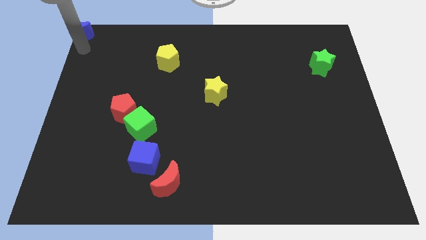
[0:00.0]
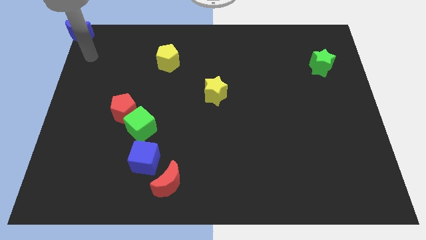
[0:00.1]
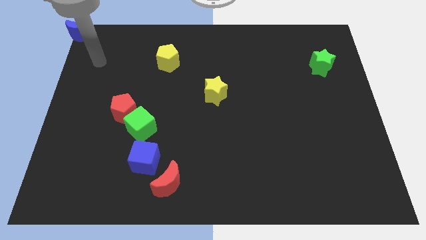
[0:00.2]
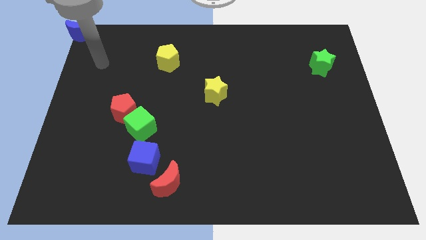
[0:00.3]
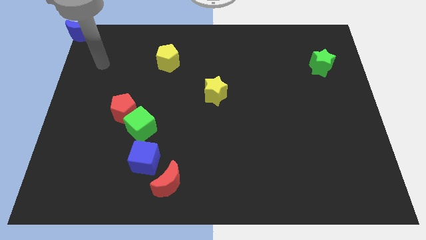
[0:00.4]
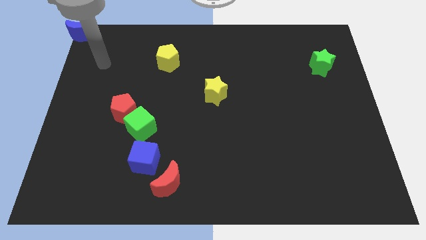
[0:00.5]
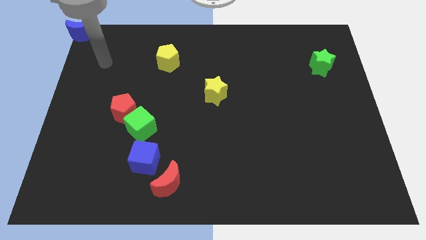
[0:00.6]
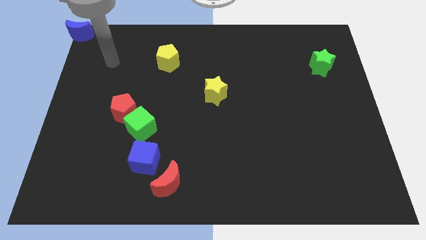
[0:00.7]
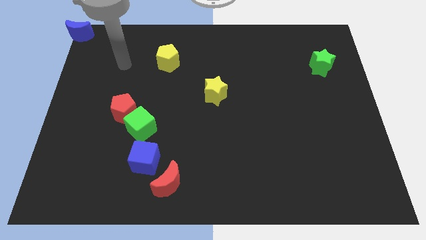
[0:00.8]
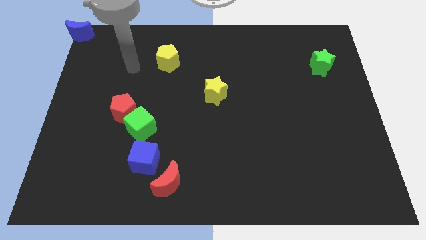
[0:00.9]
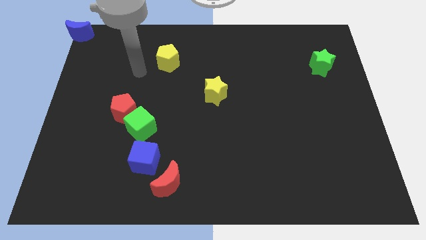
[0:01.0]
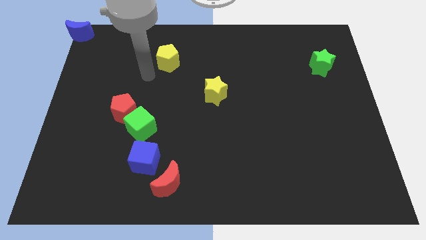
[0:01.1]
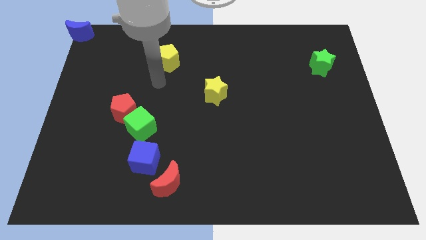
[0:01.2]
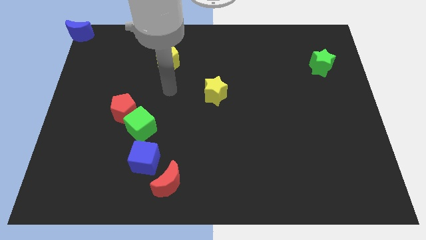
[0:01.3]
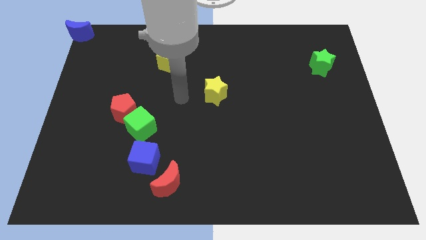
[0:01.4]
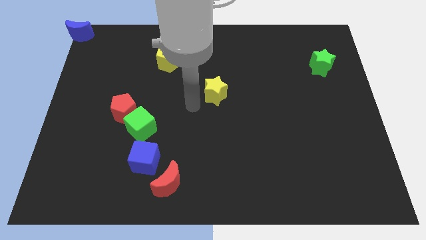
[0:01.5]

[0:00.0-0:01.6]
move your arm away from blue moon

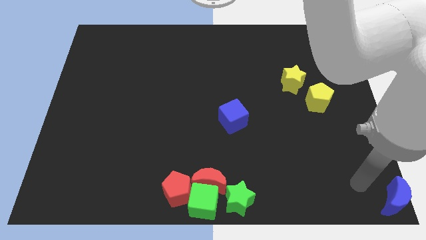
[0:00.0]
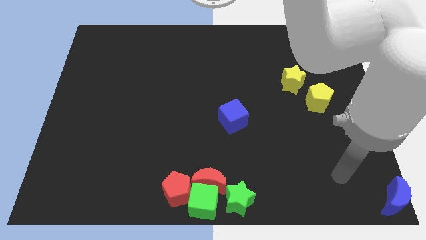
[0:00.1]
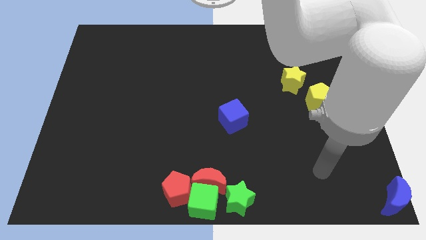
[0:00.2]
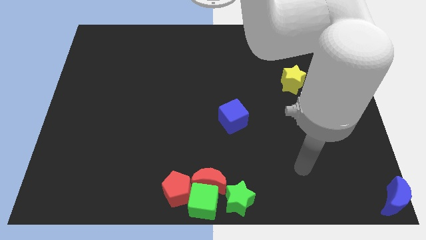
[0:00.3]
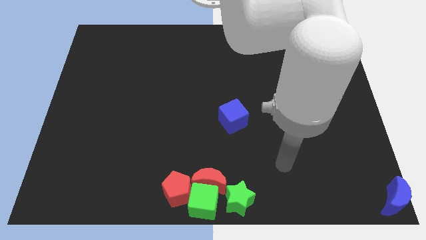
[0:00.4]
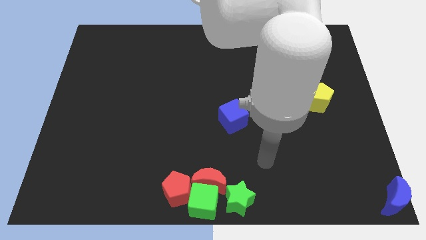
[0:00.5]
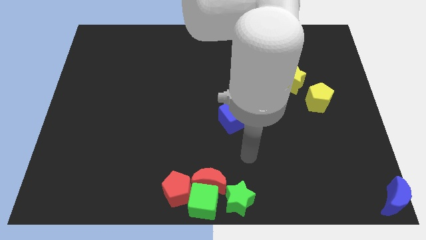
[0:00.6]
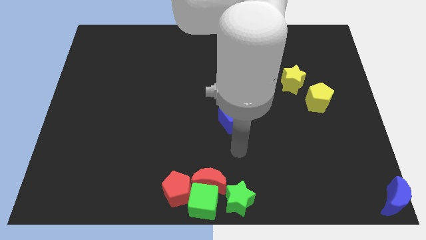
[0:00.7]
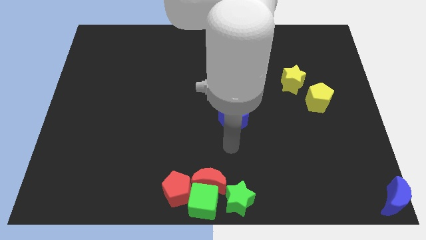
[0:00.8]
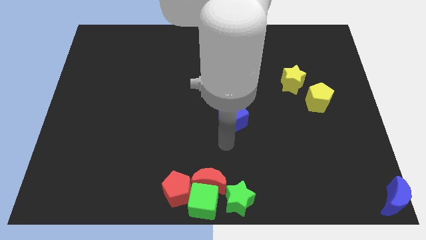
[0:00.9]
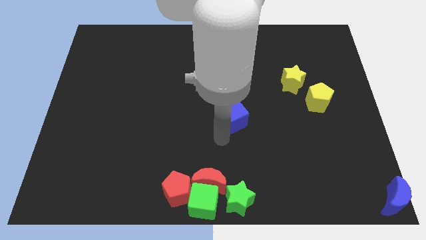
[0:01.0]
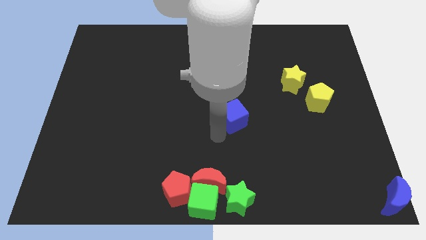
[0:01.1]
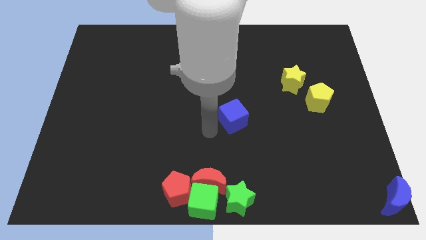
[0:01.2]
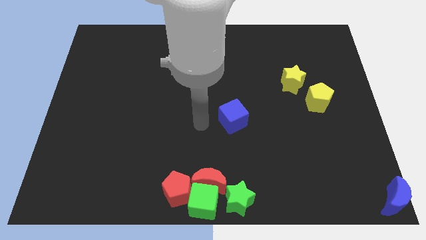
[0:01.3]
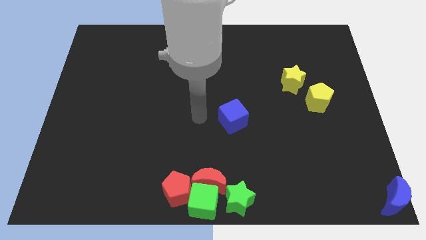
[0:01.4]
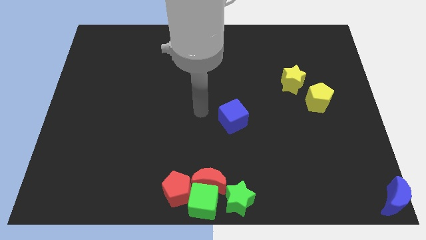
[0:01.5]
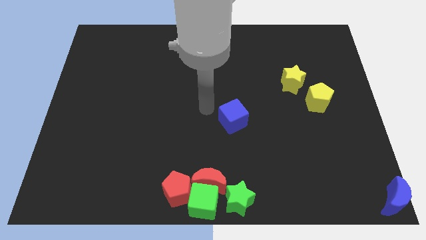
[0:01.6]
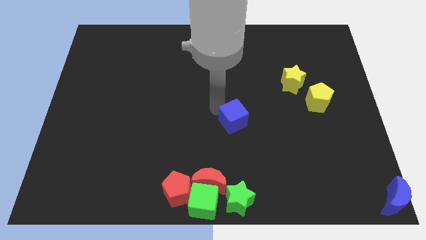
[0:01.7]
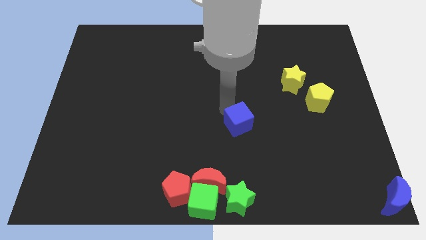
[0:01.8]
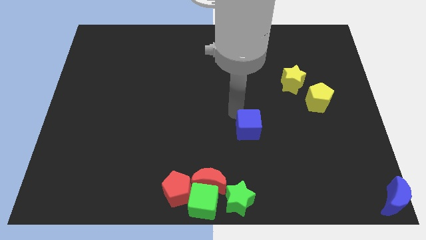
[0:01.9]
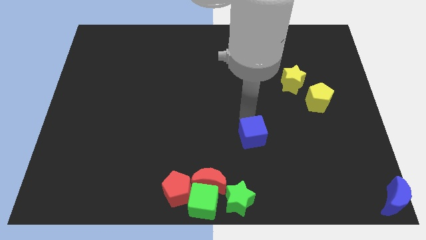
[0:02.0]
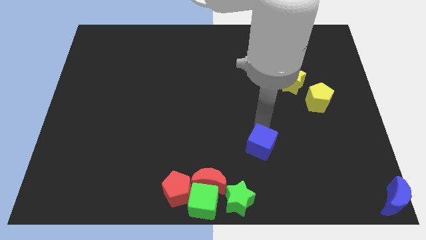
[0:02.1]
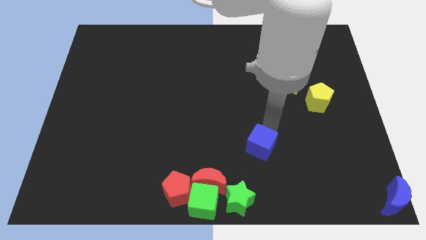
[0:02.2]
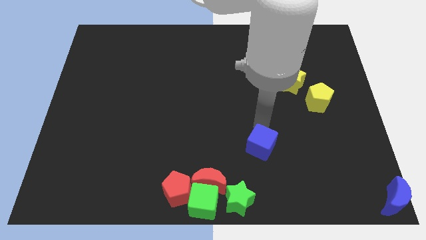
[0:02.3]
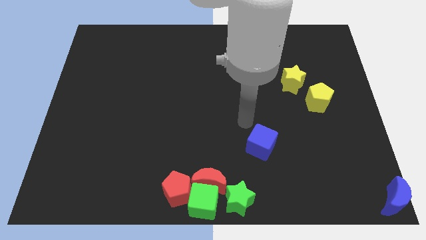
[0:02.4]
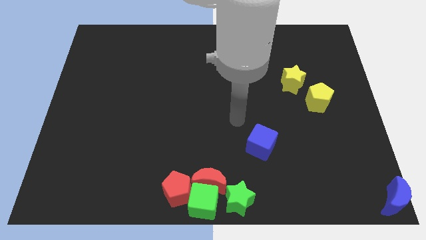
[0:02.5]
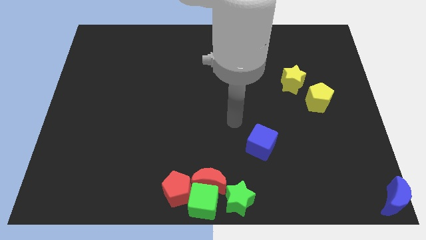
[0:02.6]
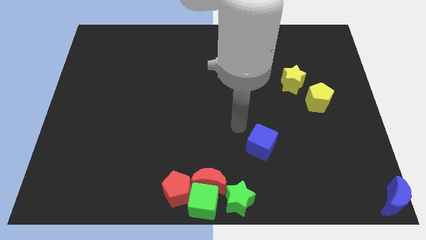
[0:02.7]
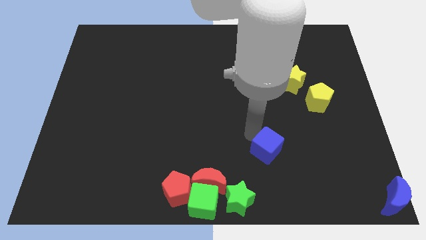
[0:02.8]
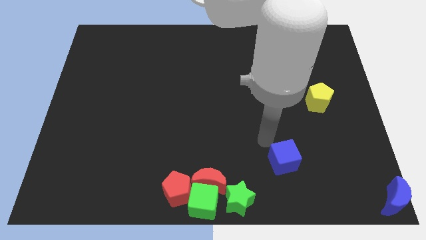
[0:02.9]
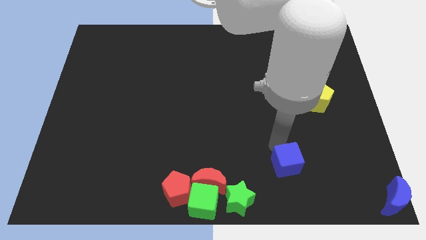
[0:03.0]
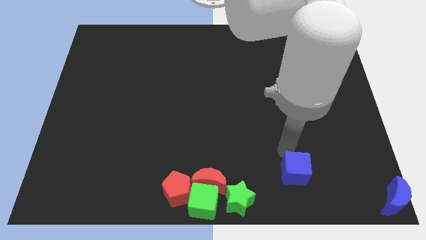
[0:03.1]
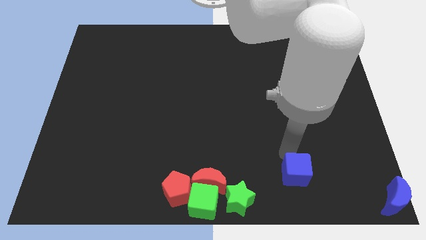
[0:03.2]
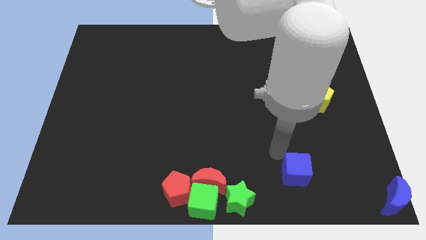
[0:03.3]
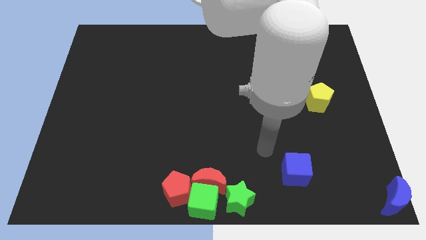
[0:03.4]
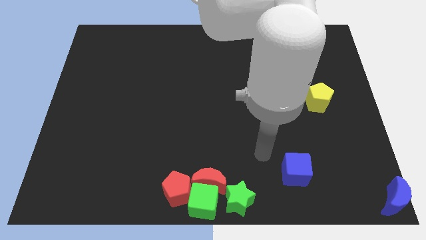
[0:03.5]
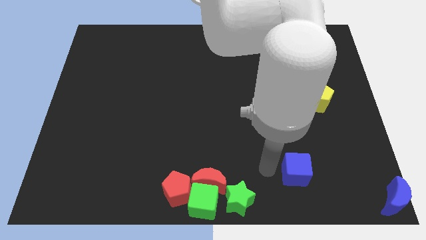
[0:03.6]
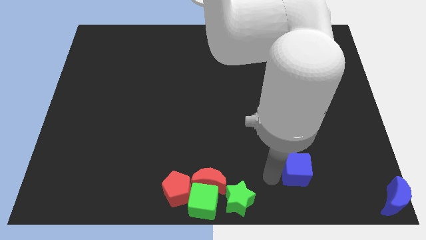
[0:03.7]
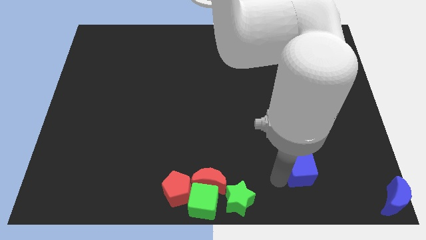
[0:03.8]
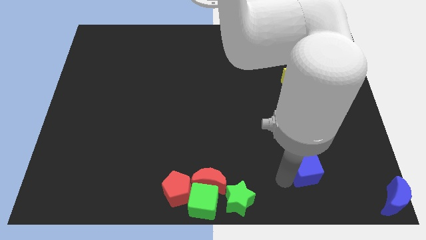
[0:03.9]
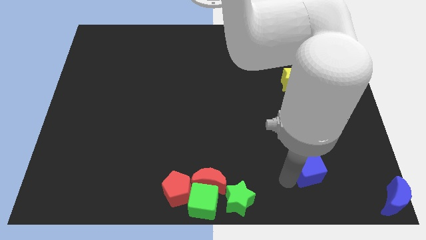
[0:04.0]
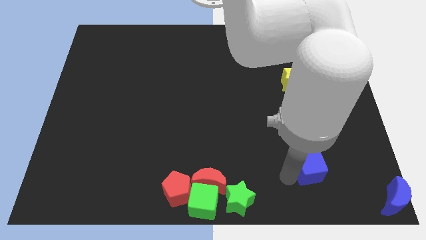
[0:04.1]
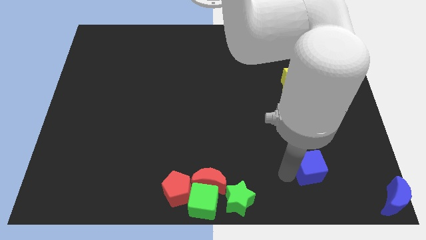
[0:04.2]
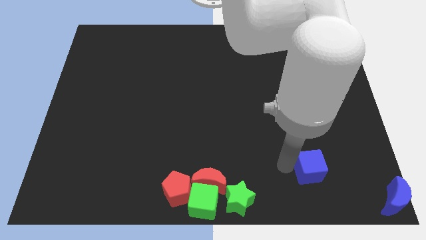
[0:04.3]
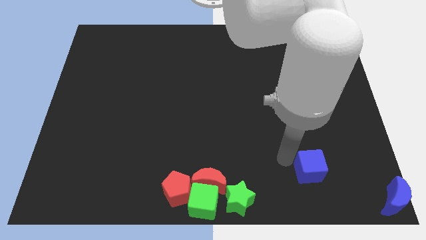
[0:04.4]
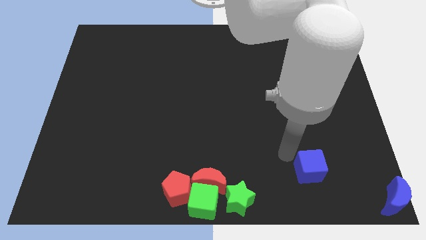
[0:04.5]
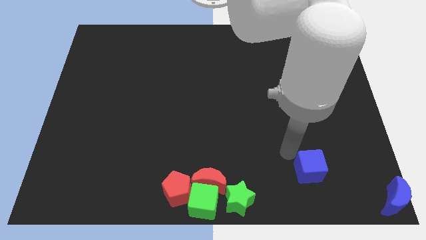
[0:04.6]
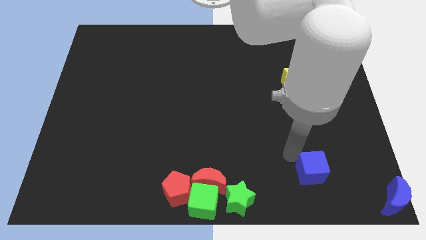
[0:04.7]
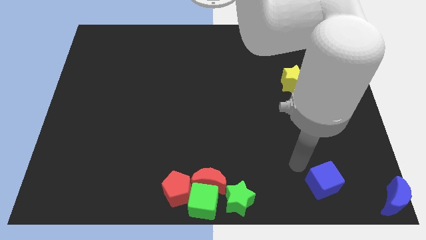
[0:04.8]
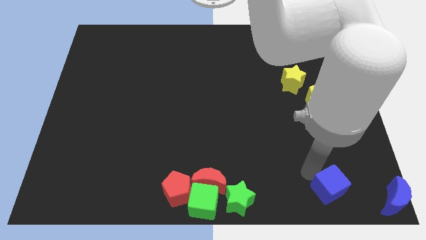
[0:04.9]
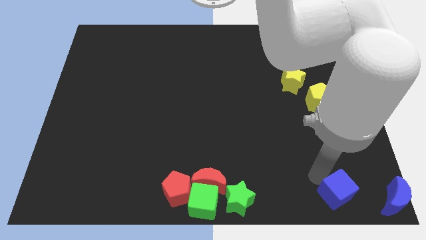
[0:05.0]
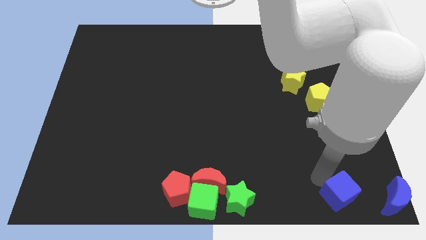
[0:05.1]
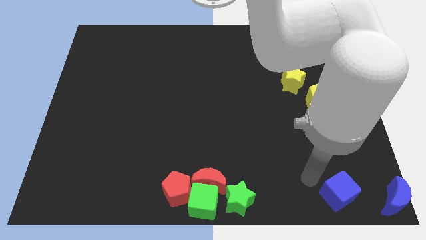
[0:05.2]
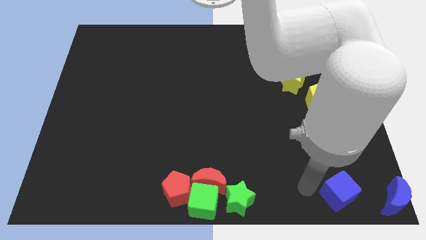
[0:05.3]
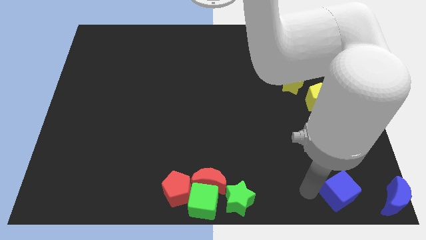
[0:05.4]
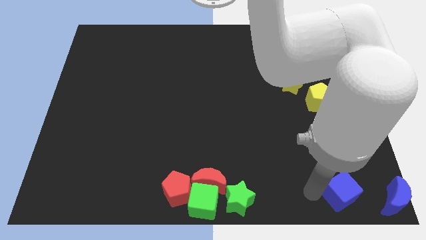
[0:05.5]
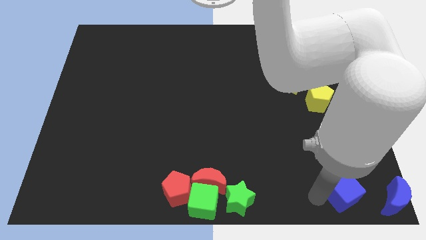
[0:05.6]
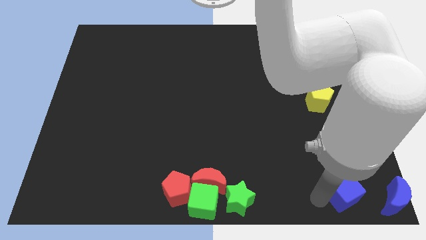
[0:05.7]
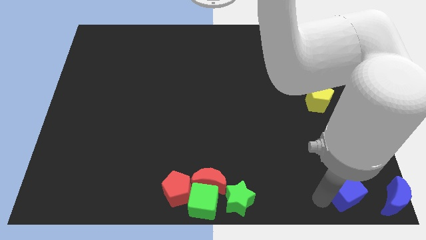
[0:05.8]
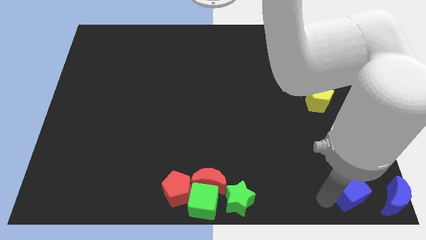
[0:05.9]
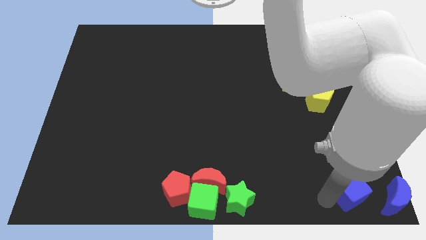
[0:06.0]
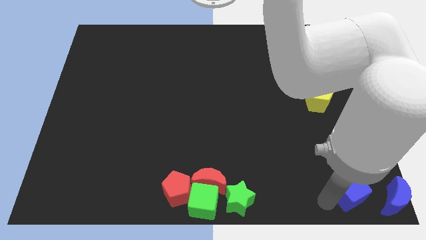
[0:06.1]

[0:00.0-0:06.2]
move the blue cube on the left side of the blue moon

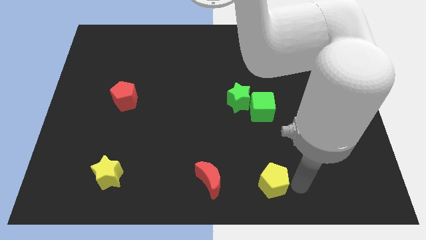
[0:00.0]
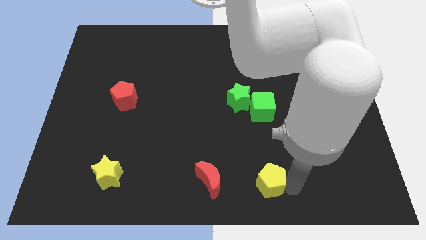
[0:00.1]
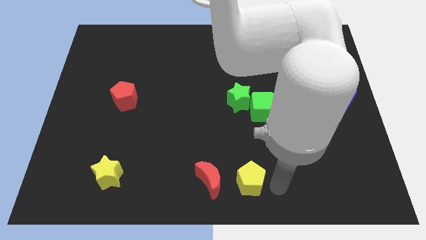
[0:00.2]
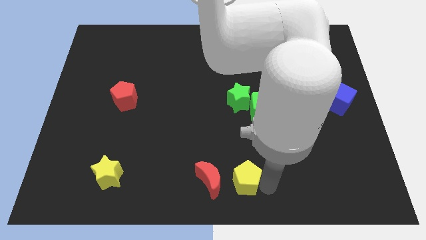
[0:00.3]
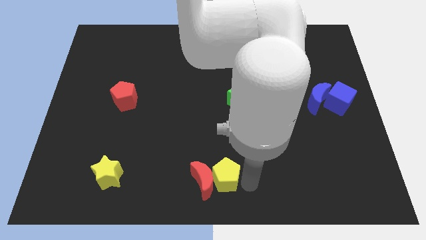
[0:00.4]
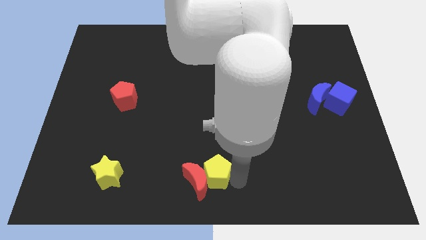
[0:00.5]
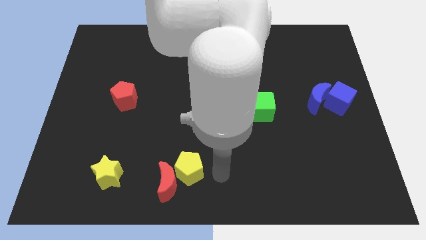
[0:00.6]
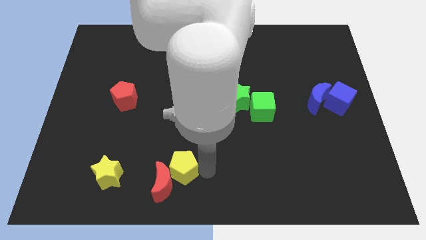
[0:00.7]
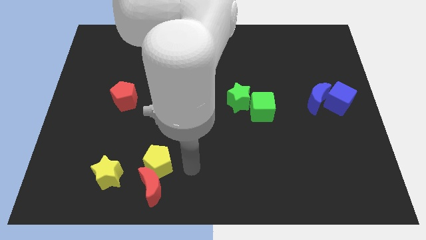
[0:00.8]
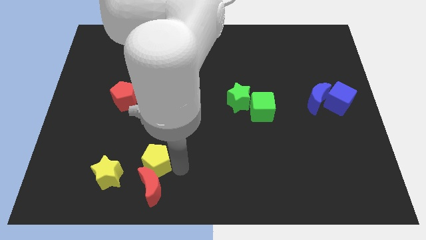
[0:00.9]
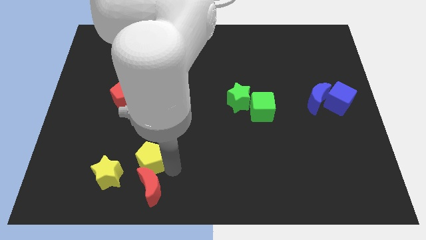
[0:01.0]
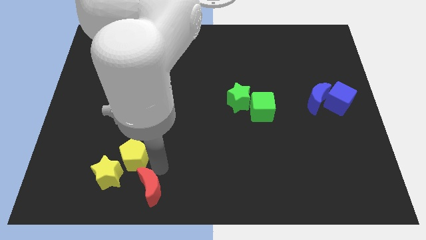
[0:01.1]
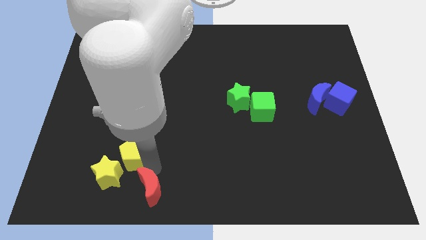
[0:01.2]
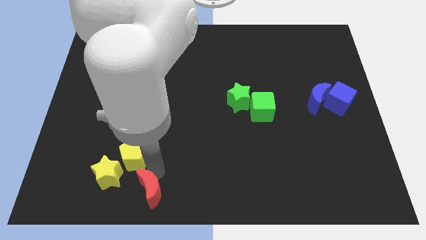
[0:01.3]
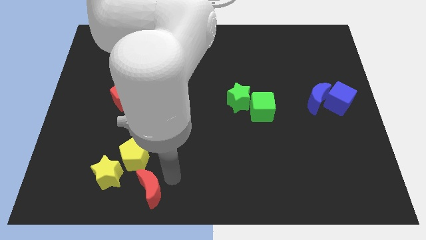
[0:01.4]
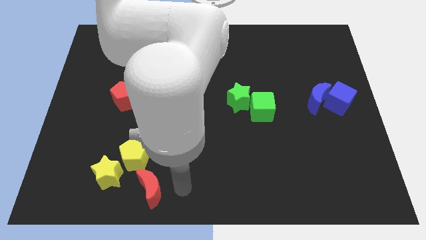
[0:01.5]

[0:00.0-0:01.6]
move yellow pentagon to the top right of the yellow star
